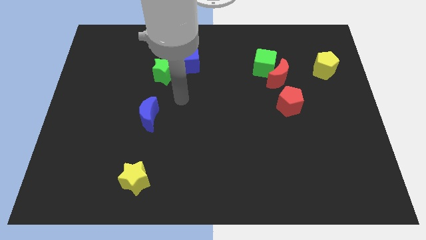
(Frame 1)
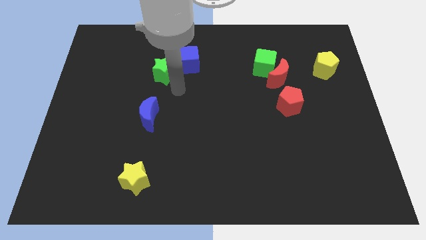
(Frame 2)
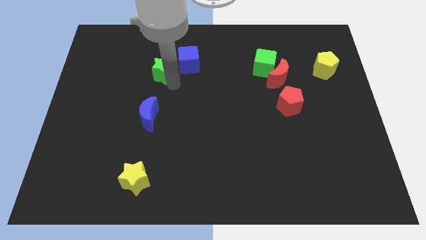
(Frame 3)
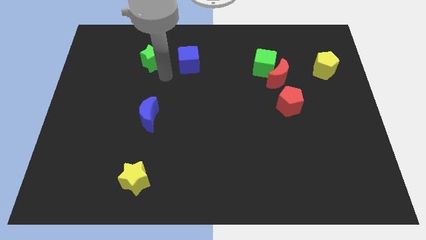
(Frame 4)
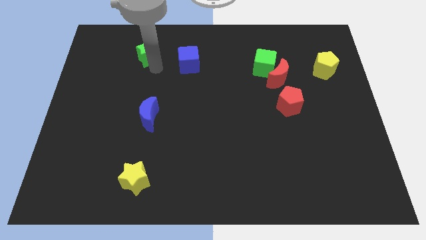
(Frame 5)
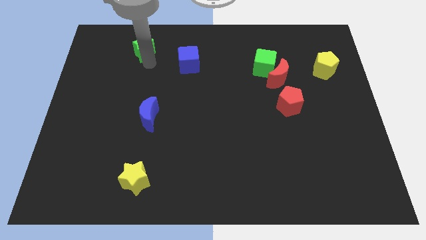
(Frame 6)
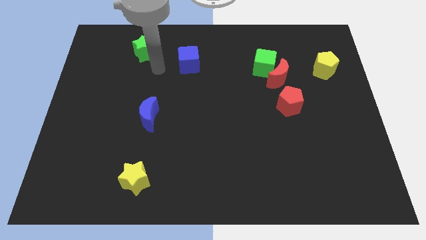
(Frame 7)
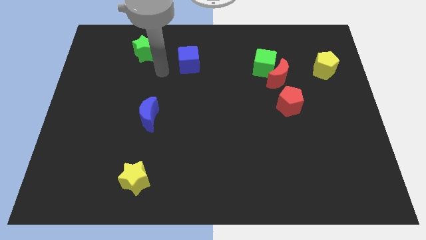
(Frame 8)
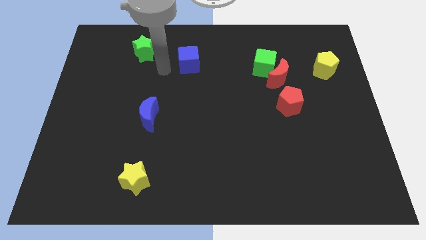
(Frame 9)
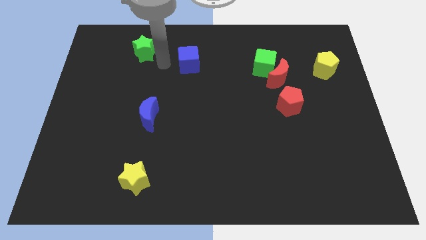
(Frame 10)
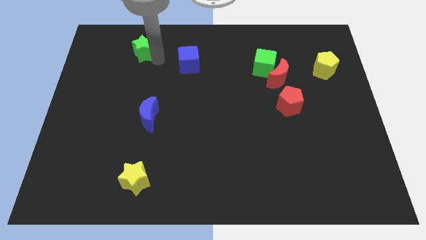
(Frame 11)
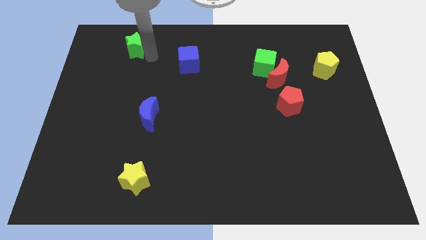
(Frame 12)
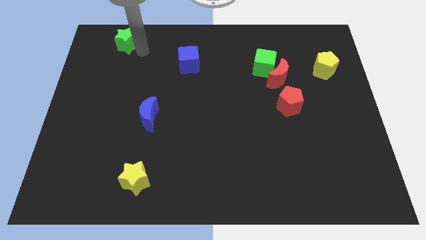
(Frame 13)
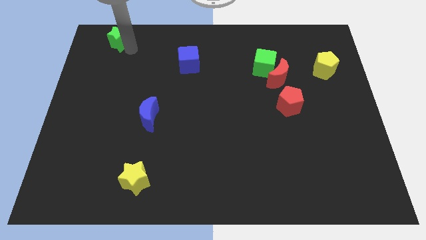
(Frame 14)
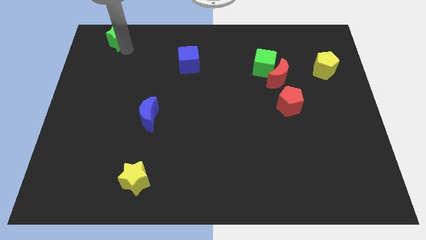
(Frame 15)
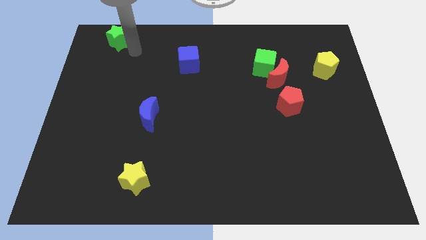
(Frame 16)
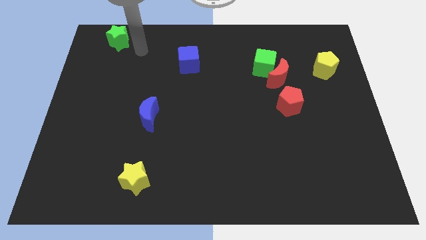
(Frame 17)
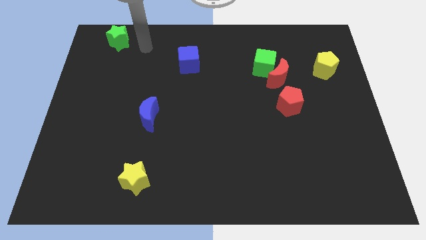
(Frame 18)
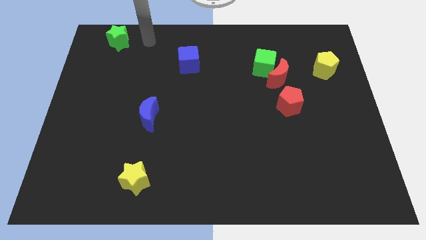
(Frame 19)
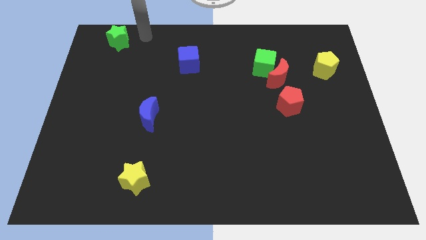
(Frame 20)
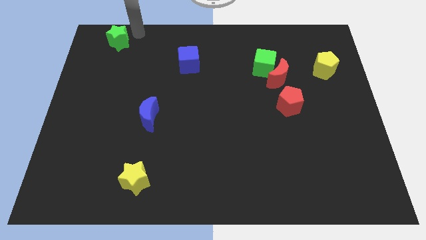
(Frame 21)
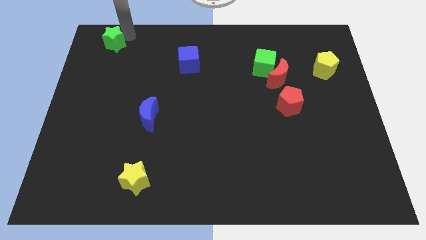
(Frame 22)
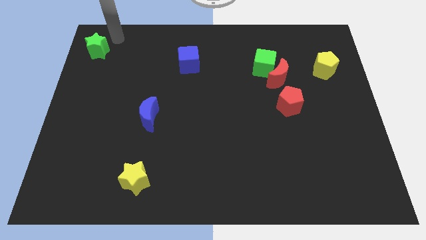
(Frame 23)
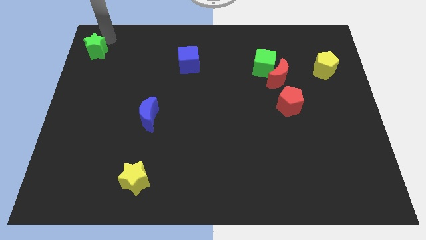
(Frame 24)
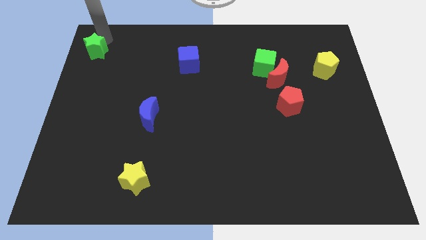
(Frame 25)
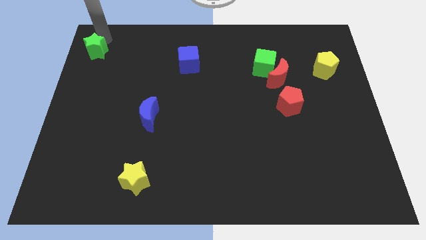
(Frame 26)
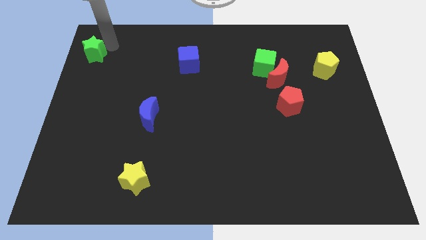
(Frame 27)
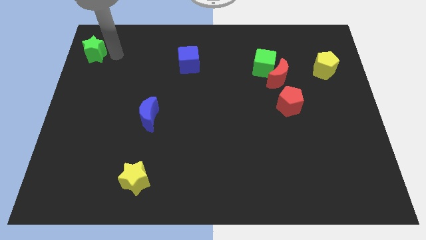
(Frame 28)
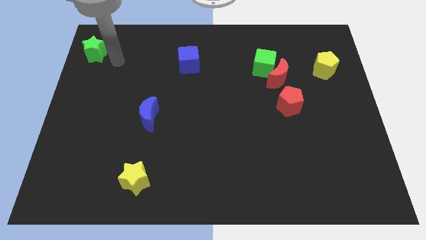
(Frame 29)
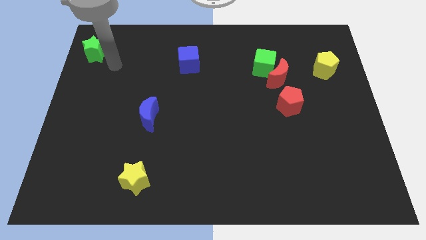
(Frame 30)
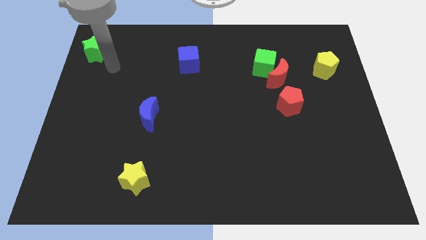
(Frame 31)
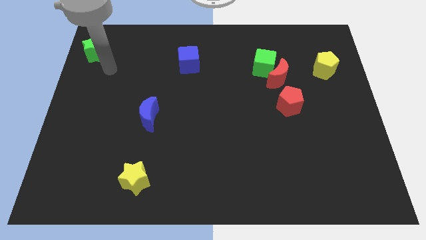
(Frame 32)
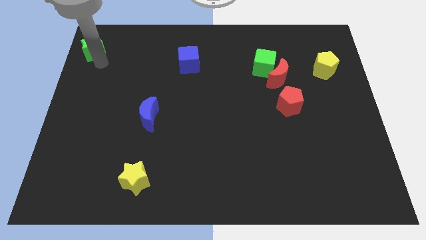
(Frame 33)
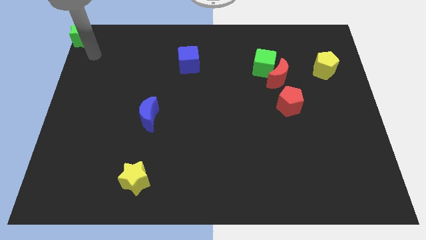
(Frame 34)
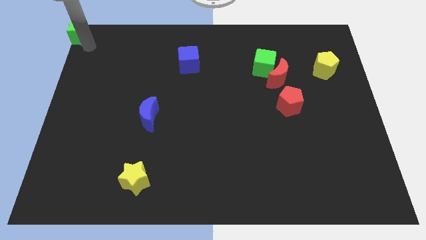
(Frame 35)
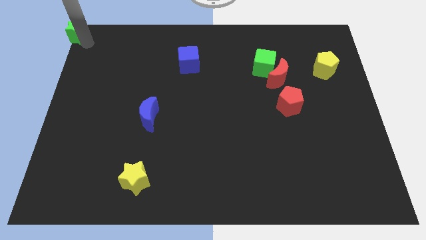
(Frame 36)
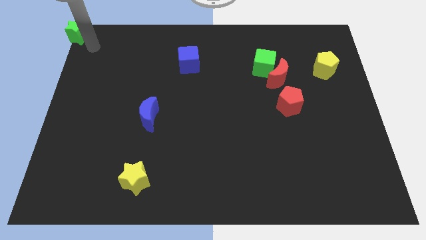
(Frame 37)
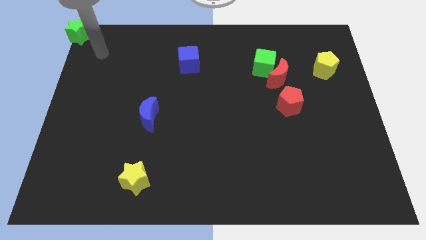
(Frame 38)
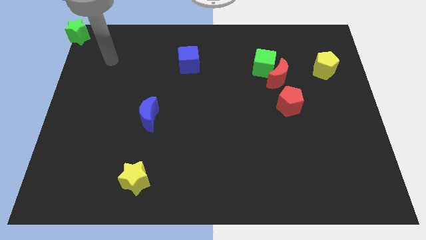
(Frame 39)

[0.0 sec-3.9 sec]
move the green star to the top left corner

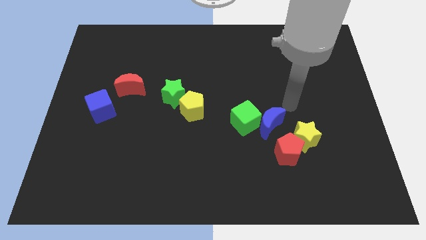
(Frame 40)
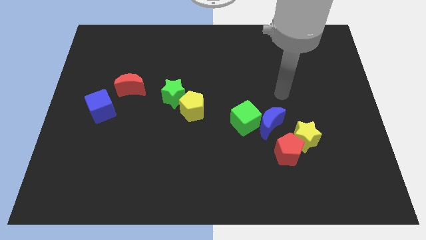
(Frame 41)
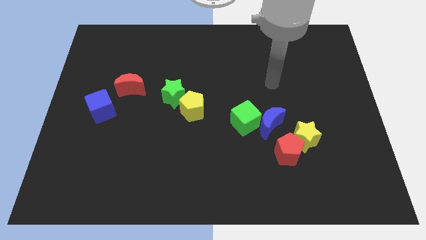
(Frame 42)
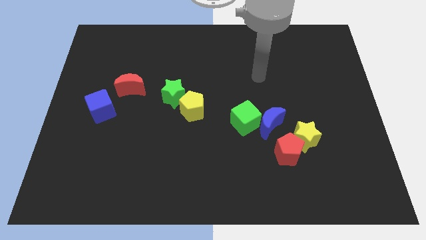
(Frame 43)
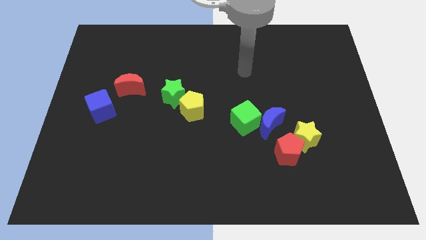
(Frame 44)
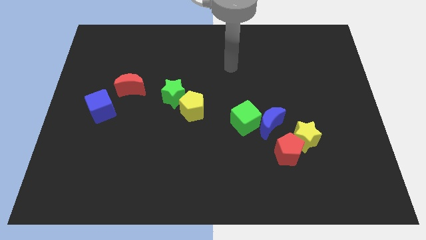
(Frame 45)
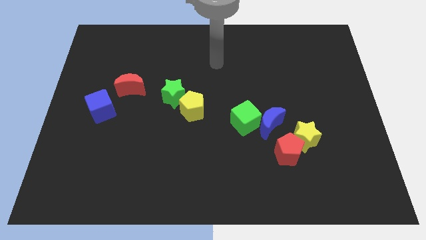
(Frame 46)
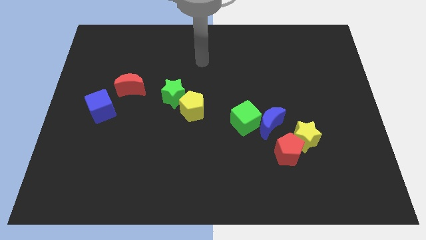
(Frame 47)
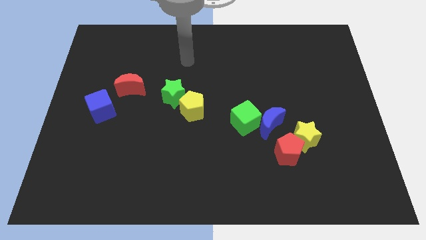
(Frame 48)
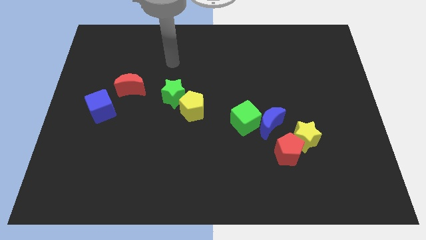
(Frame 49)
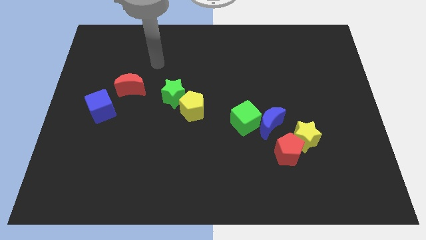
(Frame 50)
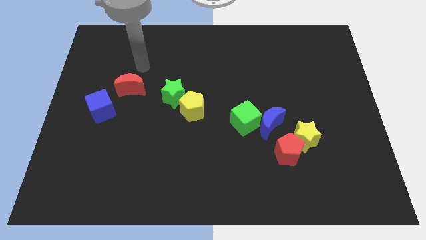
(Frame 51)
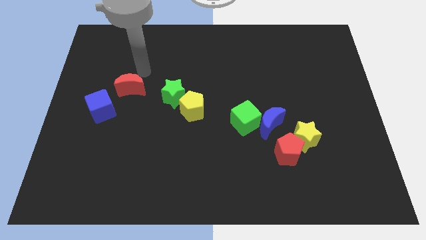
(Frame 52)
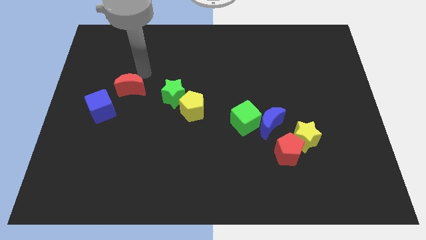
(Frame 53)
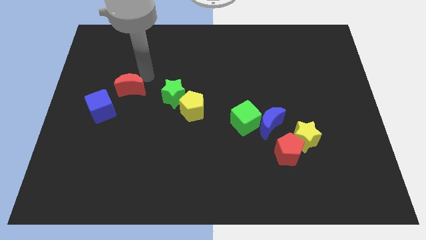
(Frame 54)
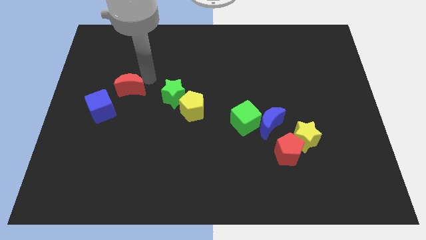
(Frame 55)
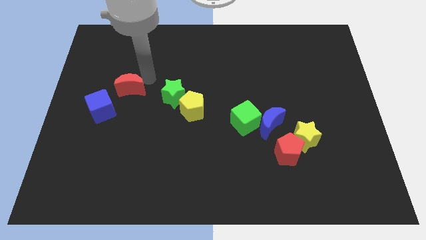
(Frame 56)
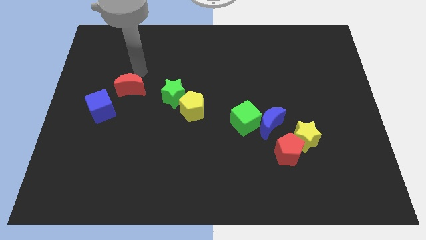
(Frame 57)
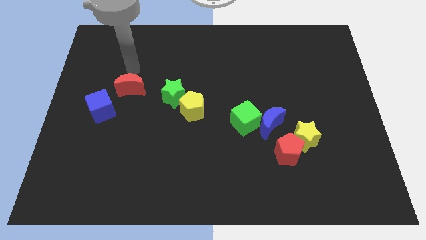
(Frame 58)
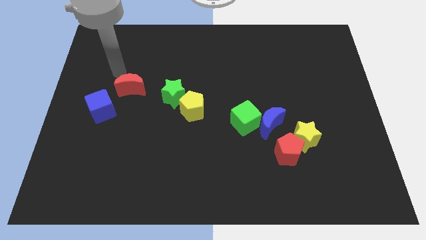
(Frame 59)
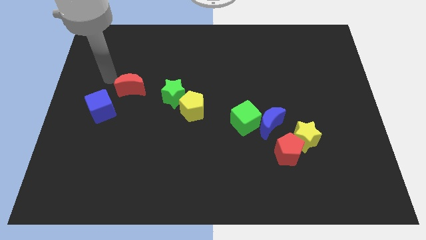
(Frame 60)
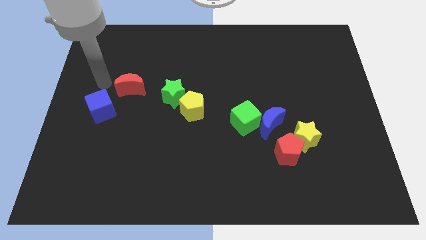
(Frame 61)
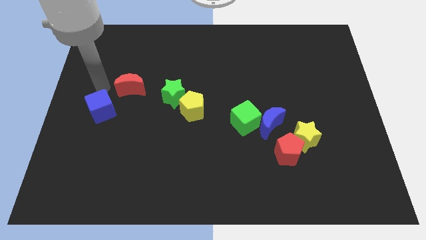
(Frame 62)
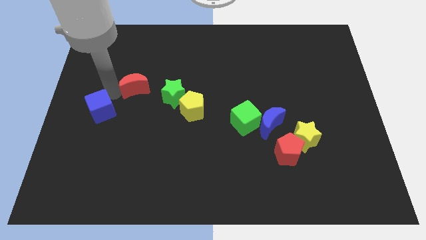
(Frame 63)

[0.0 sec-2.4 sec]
move the red moon slightly towards the center of the board

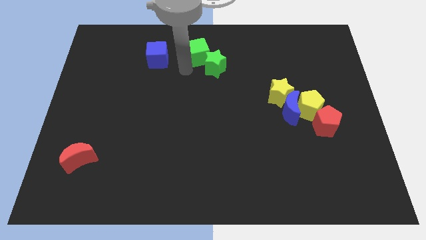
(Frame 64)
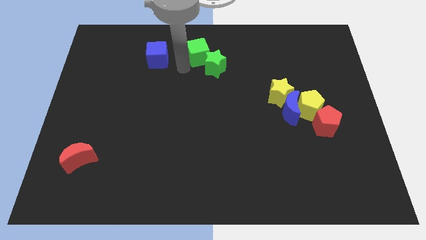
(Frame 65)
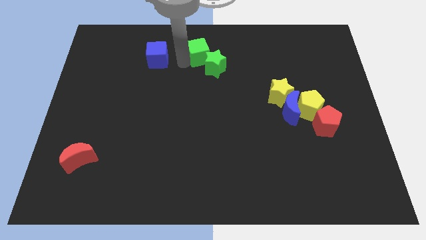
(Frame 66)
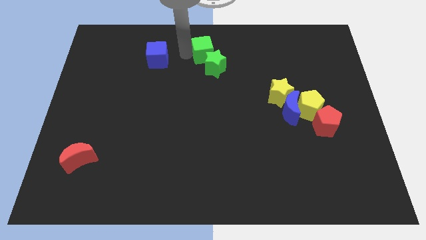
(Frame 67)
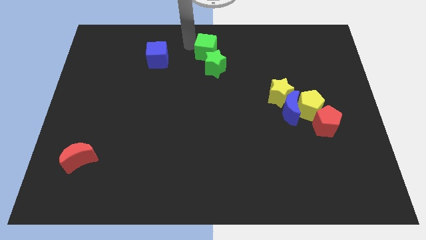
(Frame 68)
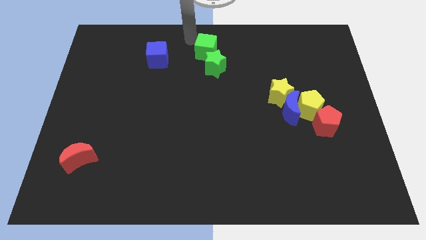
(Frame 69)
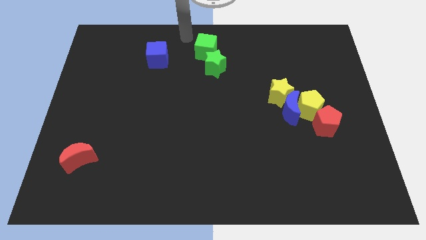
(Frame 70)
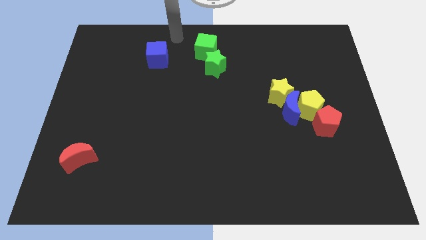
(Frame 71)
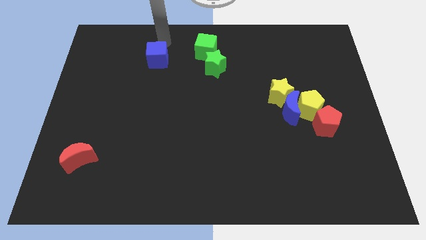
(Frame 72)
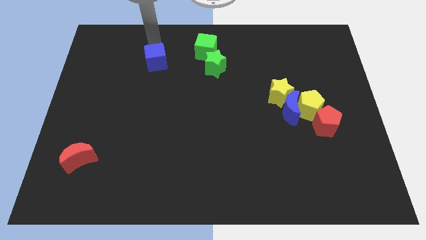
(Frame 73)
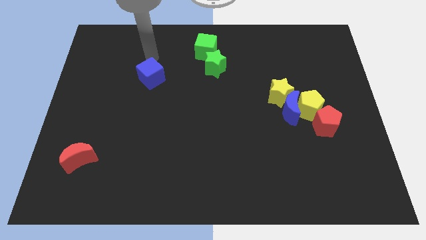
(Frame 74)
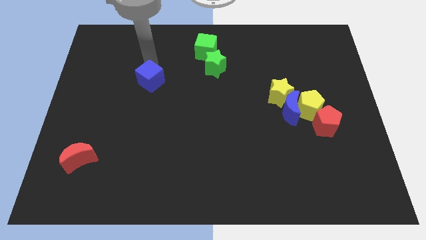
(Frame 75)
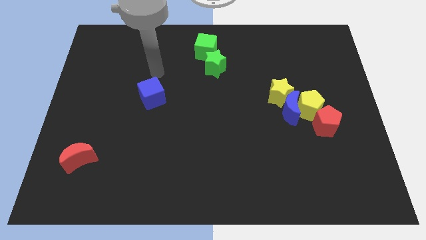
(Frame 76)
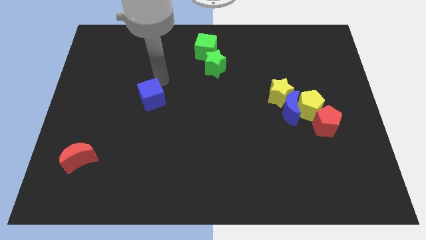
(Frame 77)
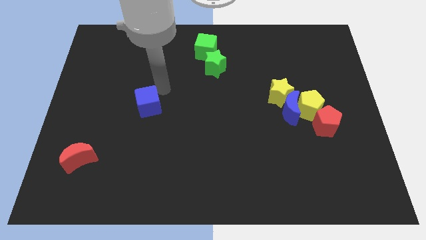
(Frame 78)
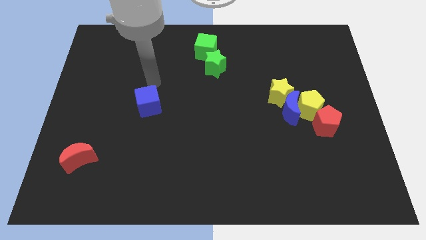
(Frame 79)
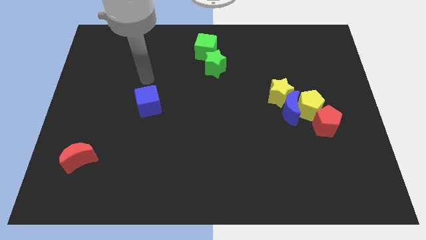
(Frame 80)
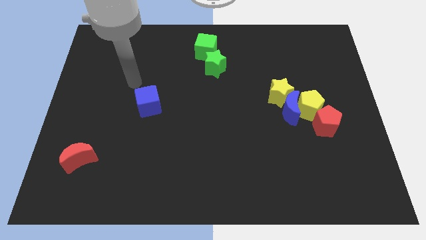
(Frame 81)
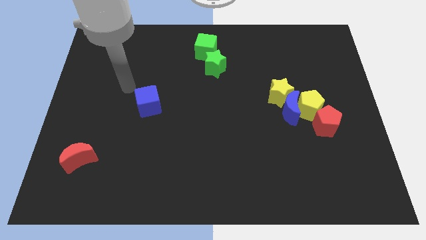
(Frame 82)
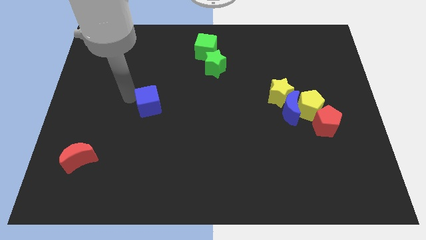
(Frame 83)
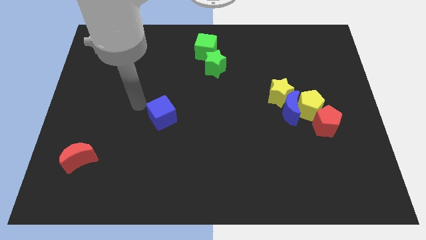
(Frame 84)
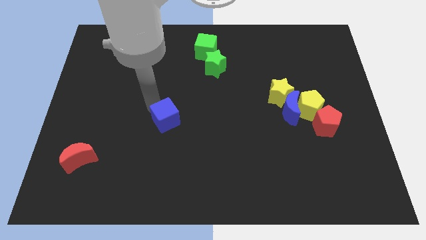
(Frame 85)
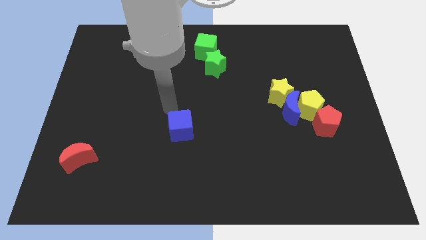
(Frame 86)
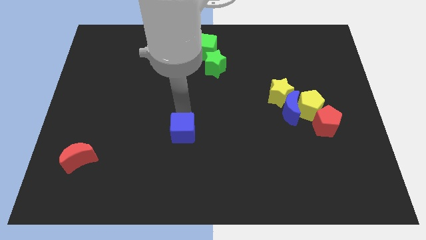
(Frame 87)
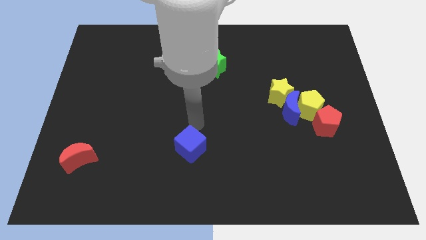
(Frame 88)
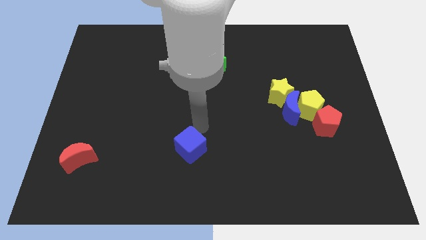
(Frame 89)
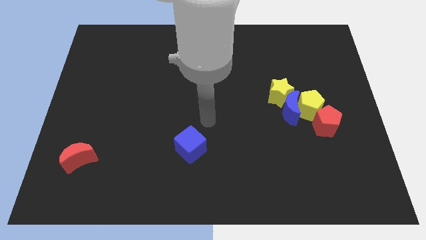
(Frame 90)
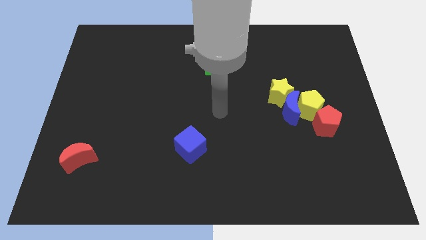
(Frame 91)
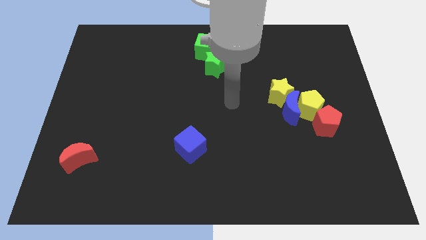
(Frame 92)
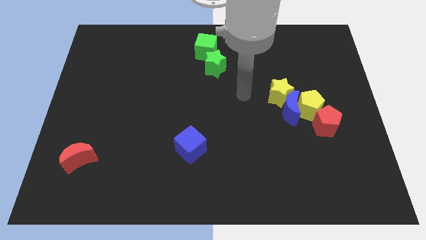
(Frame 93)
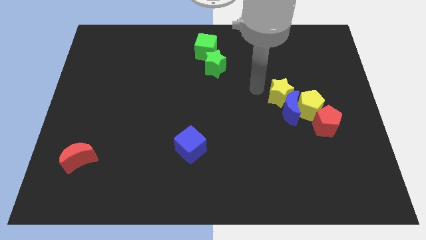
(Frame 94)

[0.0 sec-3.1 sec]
slide the blue cube horizontally to the right side of the red moon
